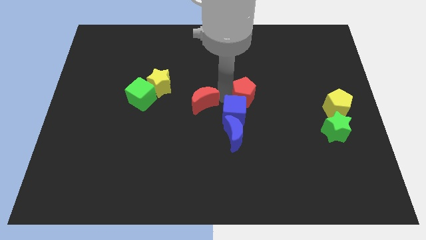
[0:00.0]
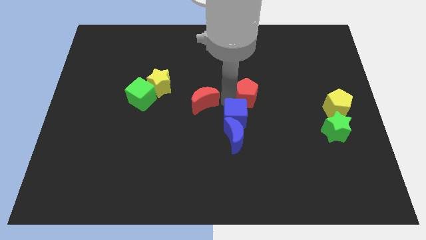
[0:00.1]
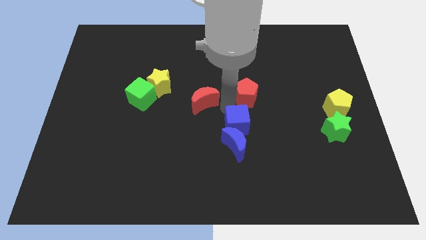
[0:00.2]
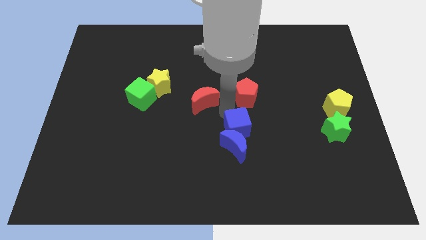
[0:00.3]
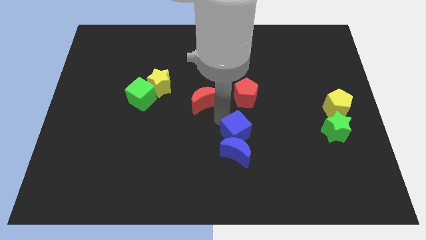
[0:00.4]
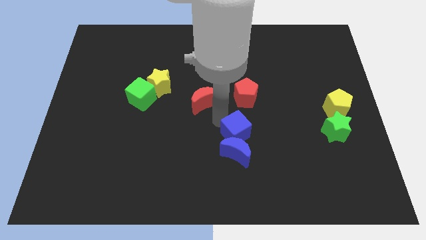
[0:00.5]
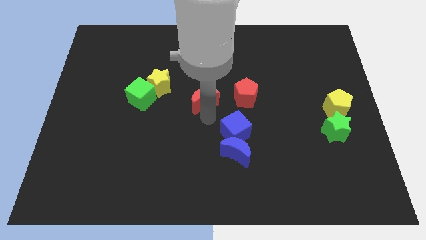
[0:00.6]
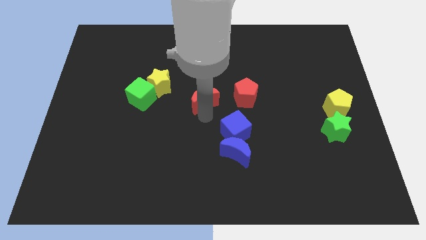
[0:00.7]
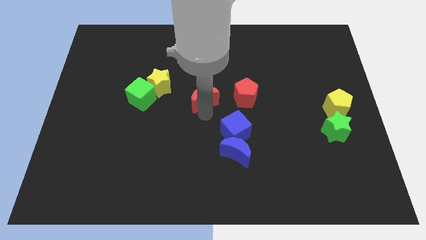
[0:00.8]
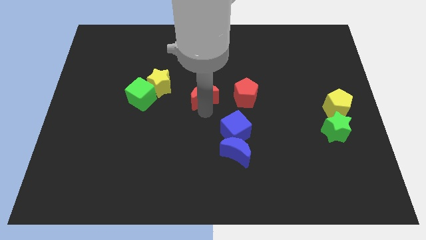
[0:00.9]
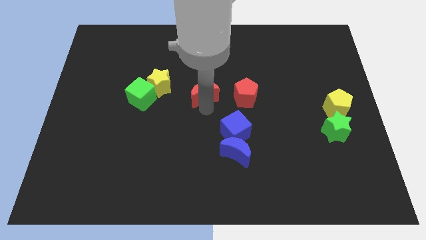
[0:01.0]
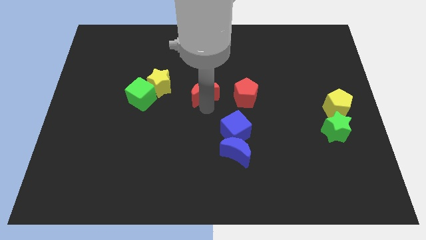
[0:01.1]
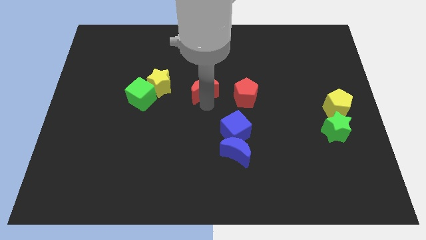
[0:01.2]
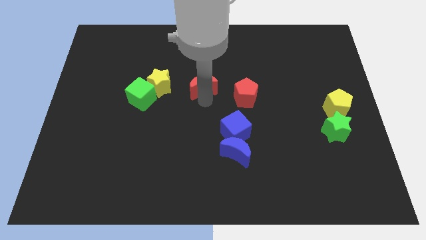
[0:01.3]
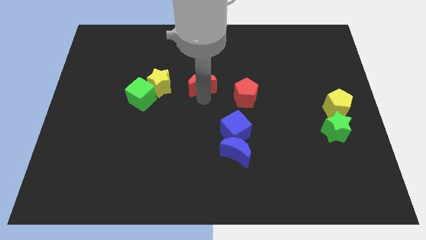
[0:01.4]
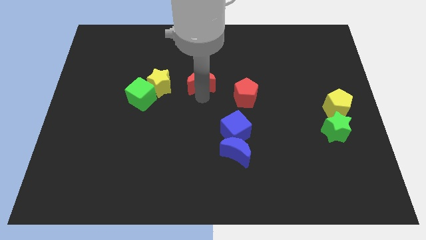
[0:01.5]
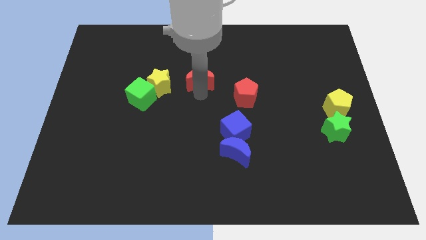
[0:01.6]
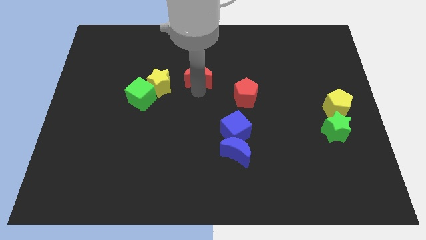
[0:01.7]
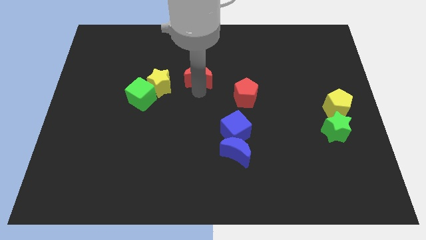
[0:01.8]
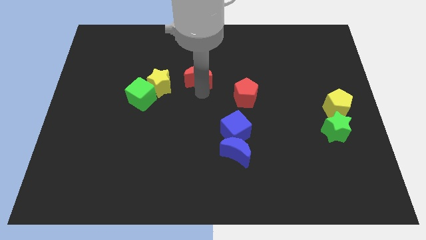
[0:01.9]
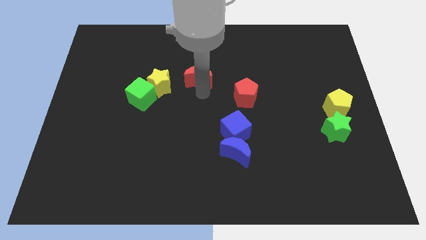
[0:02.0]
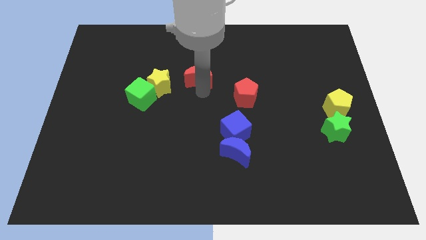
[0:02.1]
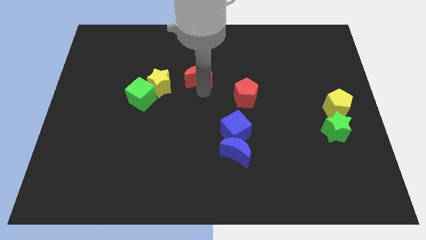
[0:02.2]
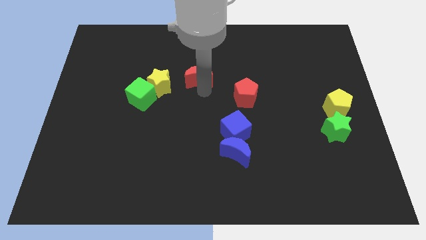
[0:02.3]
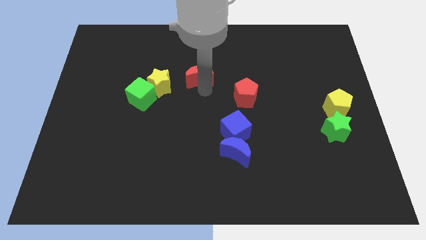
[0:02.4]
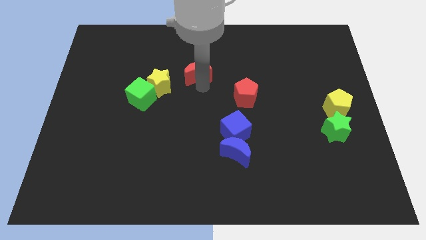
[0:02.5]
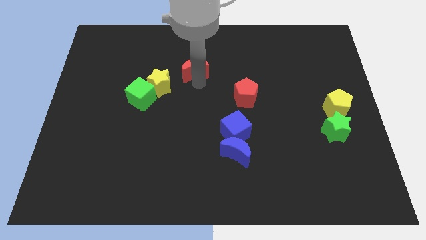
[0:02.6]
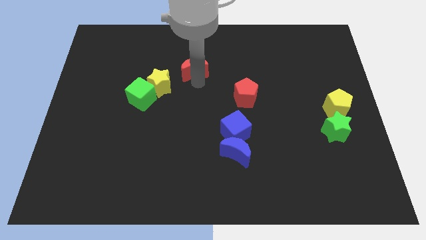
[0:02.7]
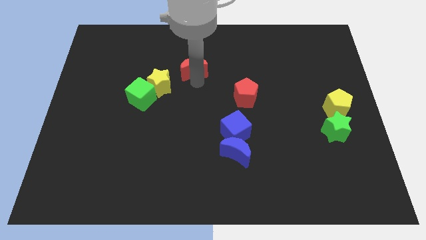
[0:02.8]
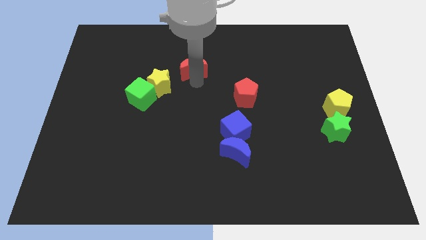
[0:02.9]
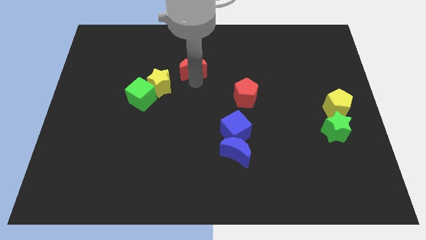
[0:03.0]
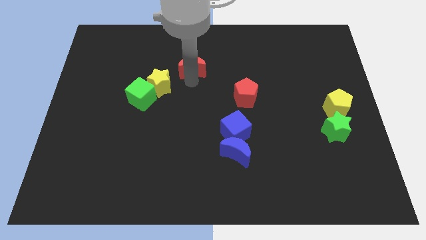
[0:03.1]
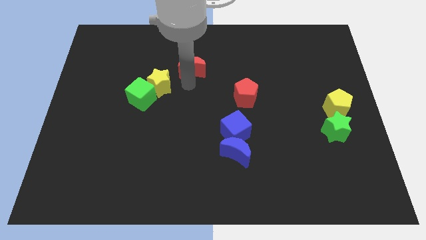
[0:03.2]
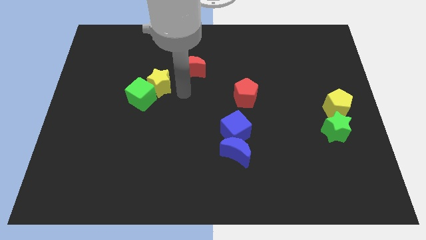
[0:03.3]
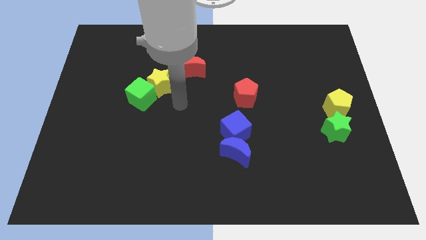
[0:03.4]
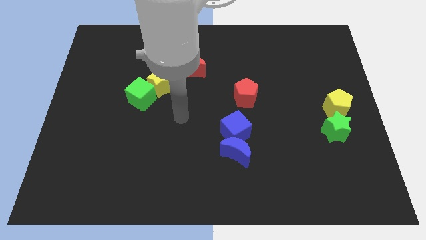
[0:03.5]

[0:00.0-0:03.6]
move the red moon slightly up

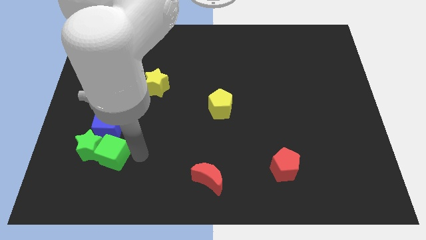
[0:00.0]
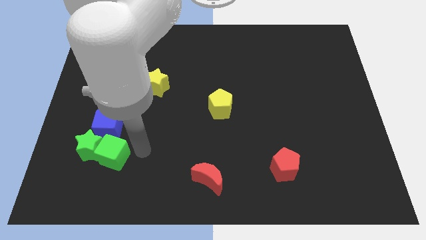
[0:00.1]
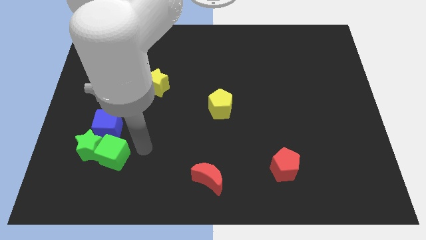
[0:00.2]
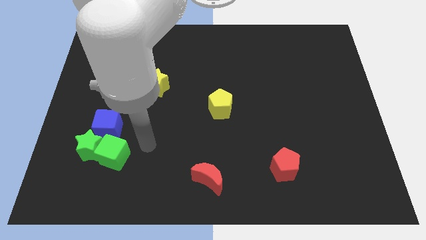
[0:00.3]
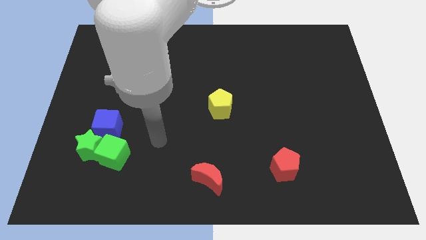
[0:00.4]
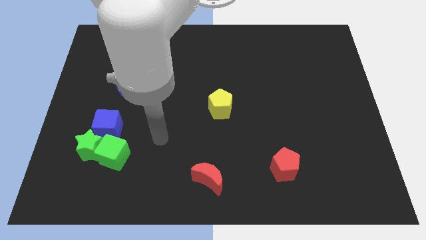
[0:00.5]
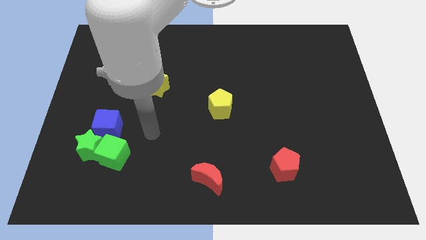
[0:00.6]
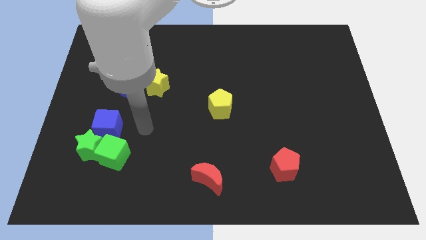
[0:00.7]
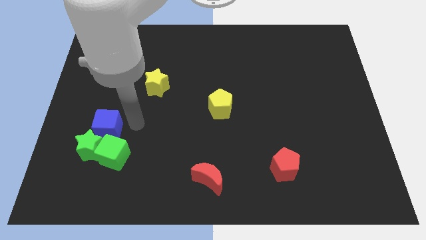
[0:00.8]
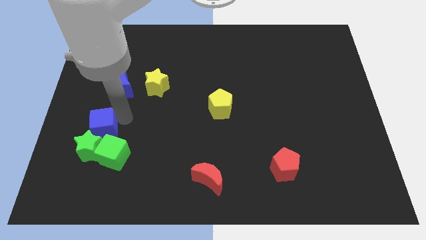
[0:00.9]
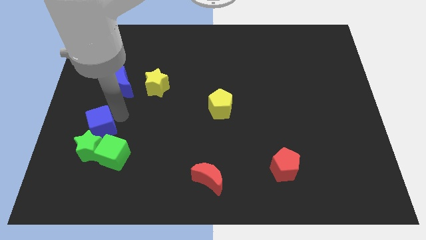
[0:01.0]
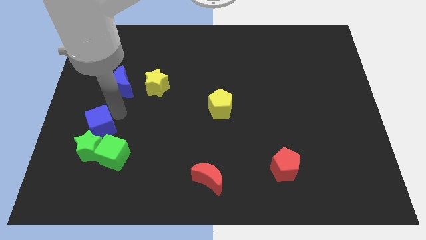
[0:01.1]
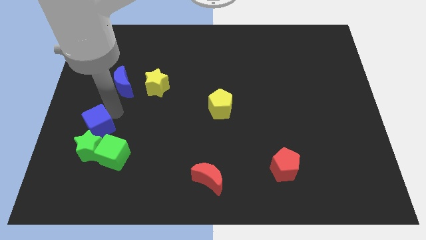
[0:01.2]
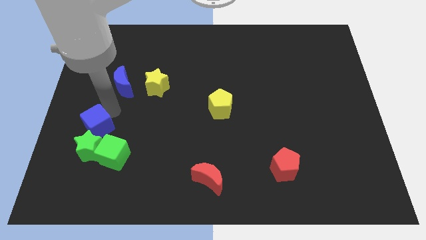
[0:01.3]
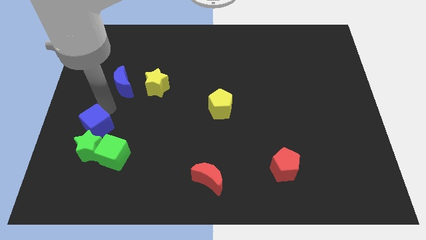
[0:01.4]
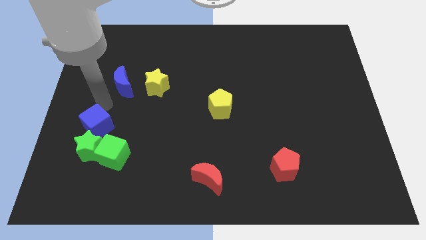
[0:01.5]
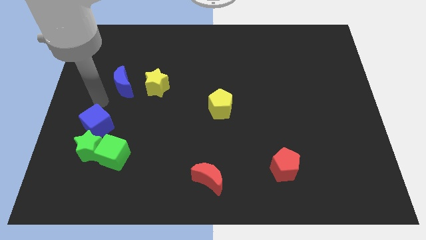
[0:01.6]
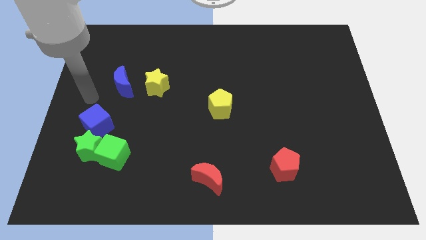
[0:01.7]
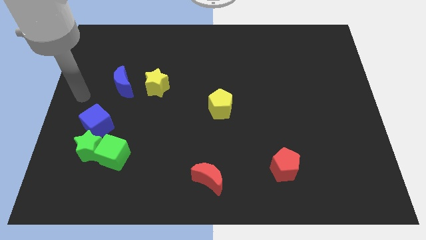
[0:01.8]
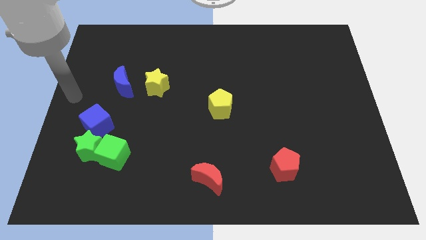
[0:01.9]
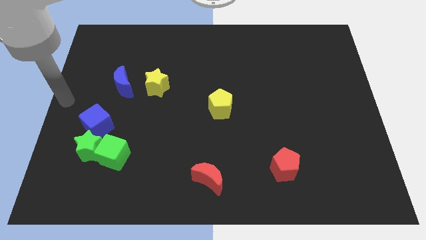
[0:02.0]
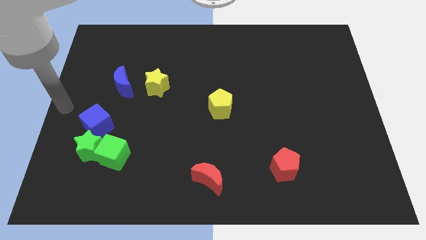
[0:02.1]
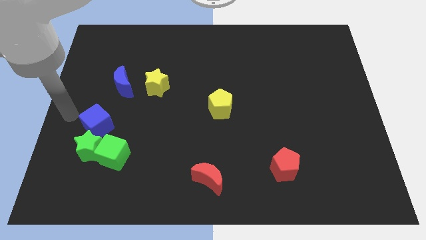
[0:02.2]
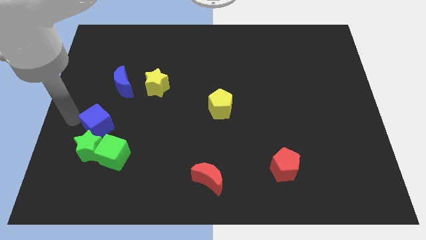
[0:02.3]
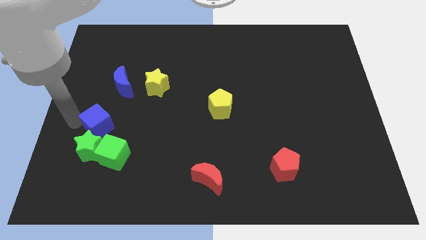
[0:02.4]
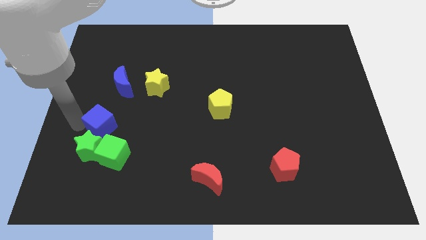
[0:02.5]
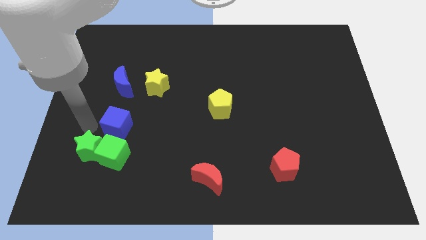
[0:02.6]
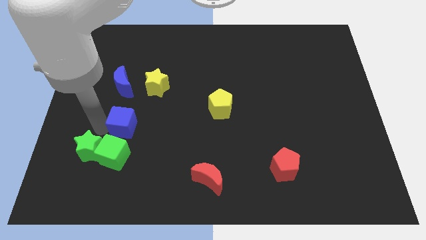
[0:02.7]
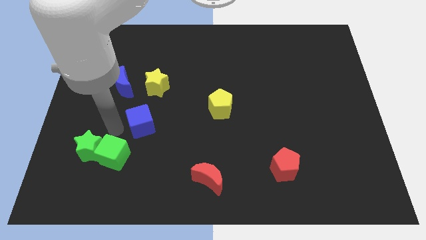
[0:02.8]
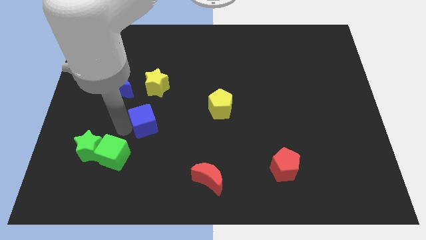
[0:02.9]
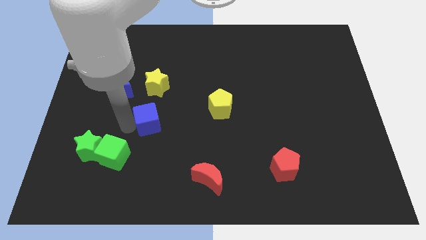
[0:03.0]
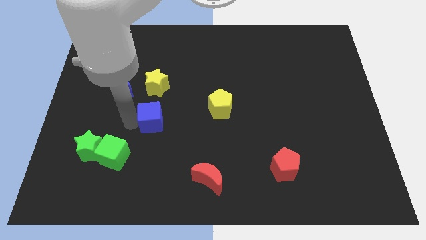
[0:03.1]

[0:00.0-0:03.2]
push blue cube to the bottom of yellow star

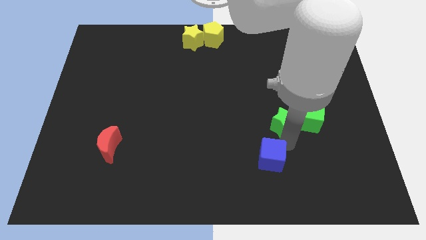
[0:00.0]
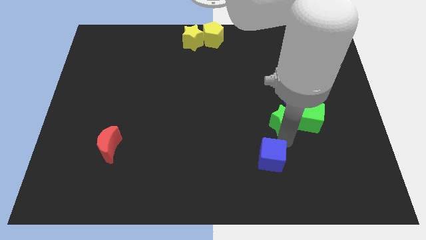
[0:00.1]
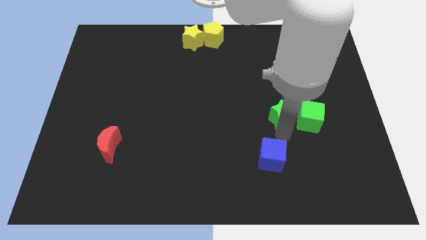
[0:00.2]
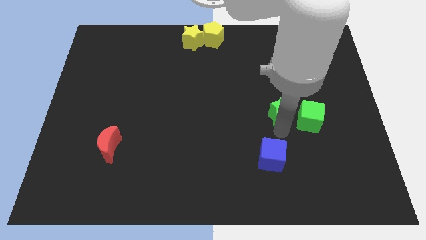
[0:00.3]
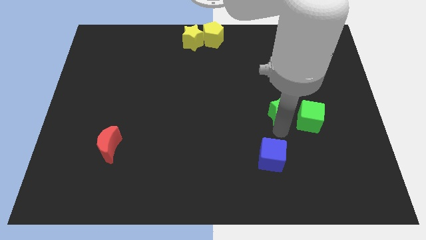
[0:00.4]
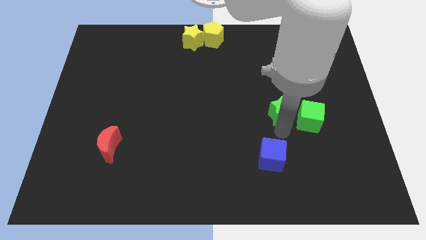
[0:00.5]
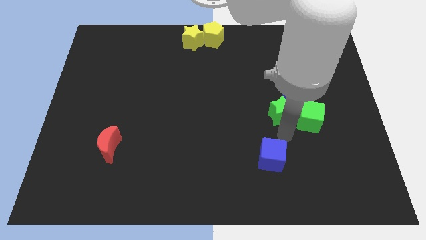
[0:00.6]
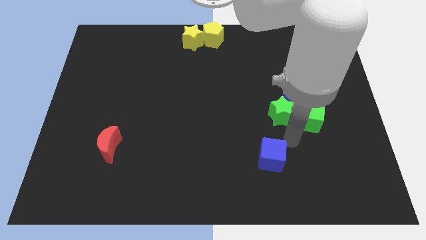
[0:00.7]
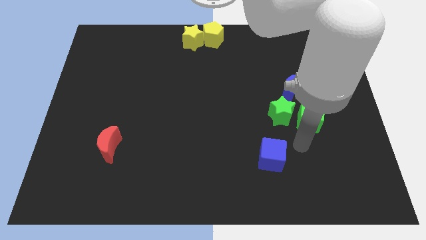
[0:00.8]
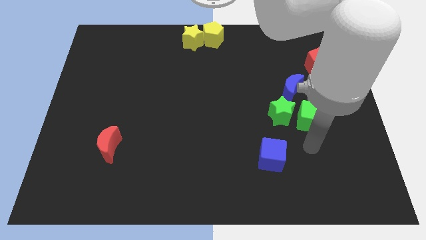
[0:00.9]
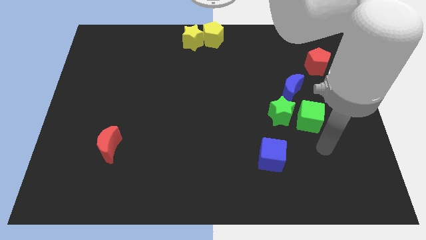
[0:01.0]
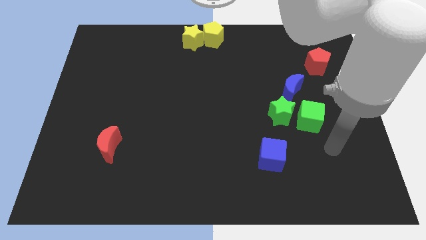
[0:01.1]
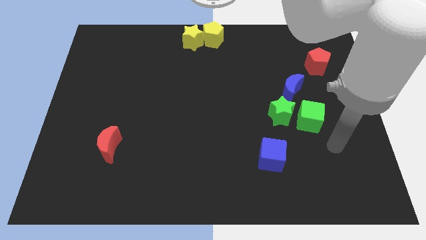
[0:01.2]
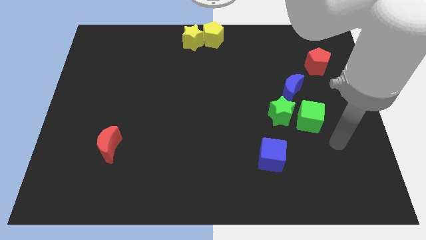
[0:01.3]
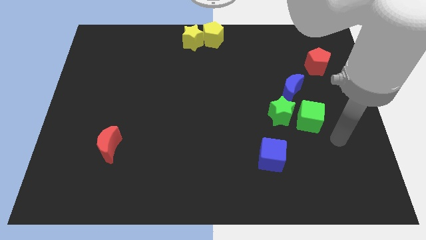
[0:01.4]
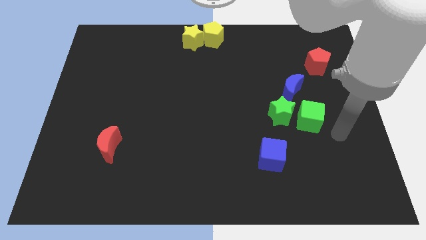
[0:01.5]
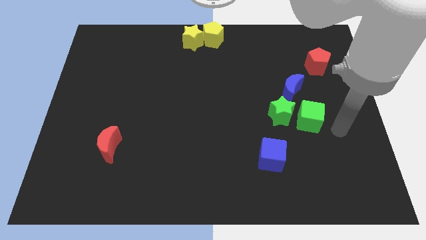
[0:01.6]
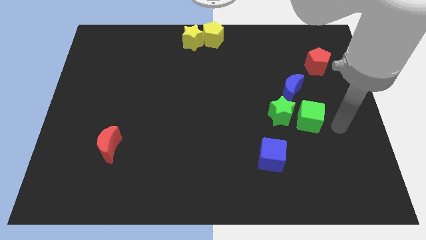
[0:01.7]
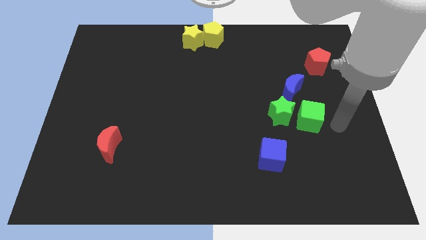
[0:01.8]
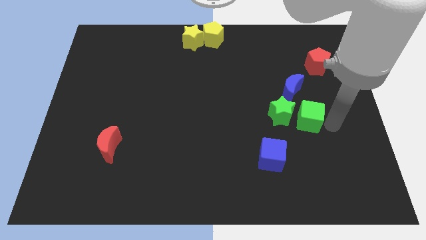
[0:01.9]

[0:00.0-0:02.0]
place the green star below the blue crescent
